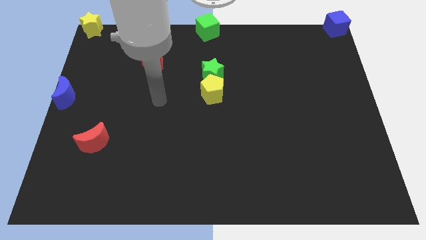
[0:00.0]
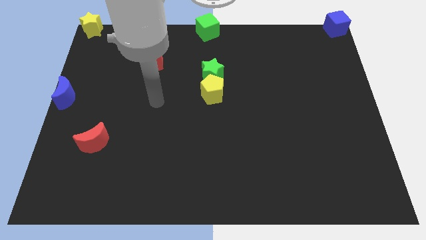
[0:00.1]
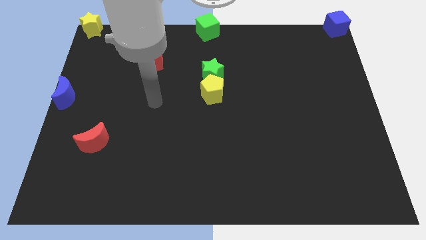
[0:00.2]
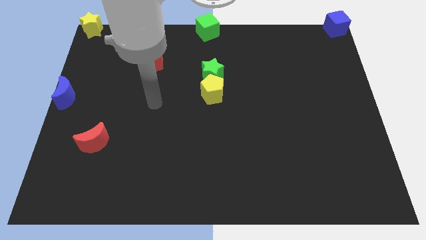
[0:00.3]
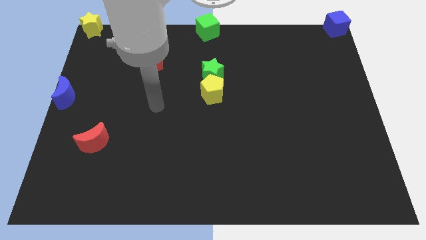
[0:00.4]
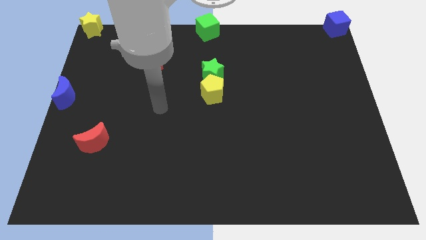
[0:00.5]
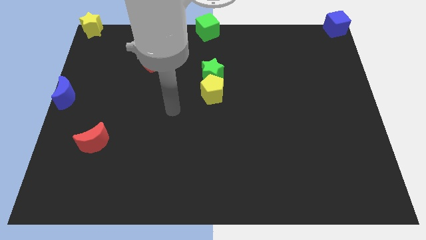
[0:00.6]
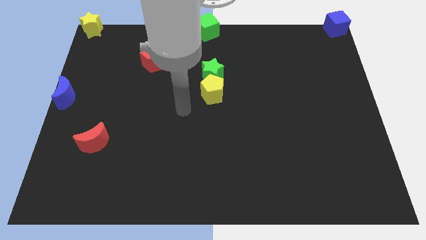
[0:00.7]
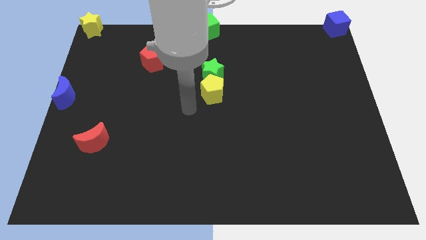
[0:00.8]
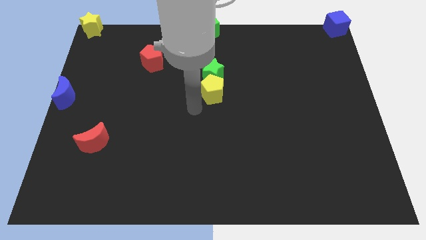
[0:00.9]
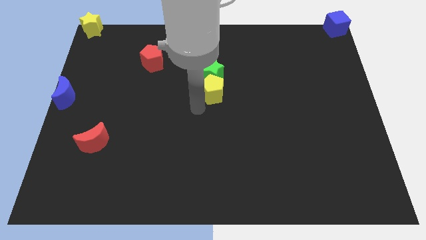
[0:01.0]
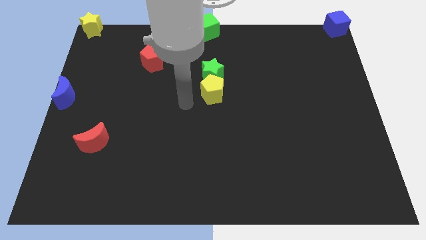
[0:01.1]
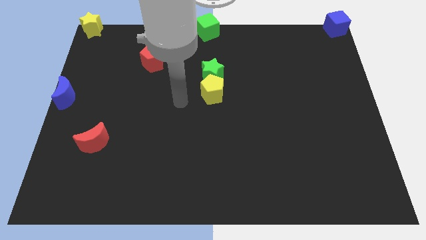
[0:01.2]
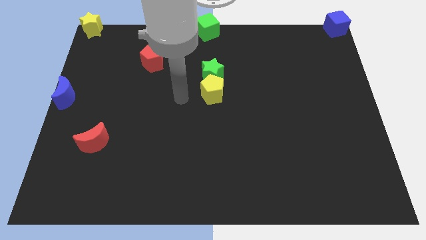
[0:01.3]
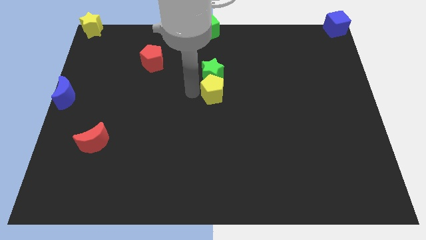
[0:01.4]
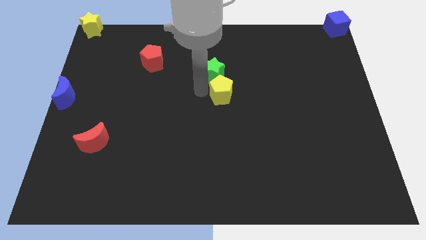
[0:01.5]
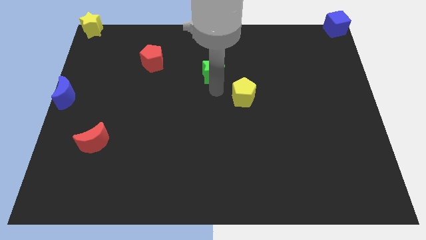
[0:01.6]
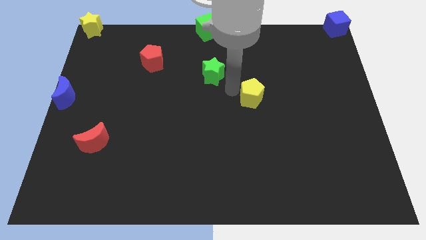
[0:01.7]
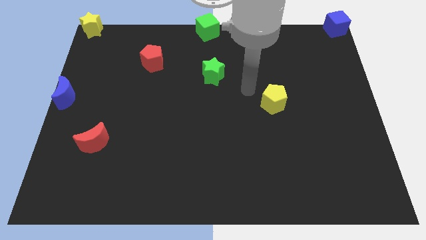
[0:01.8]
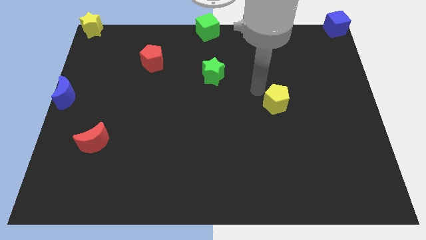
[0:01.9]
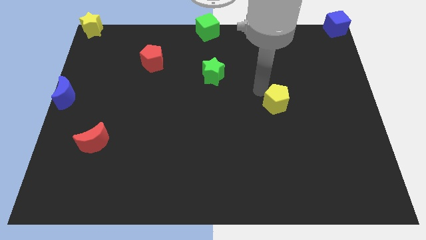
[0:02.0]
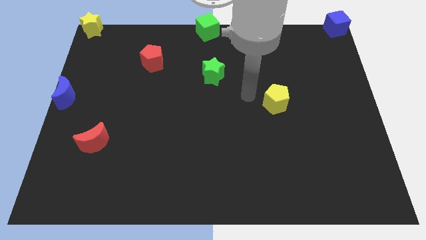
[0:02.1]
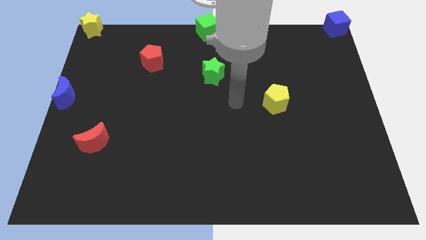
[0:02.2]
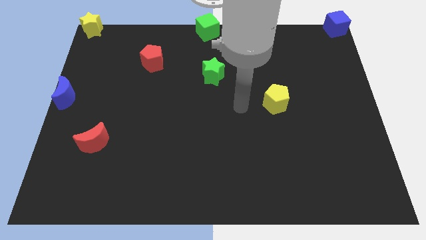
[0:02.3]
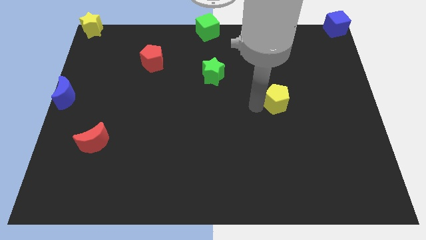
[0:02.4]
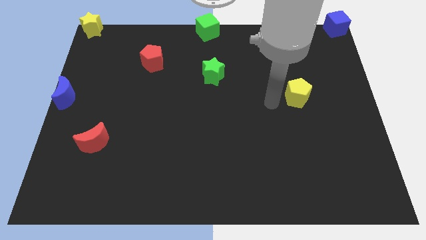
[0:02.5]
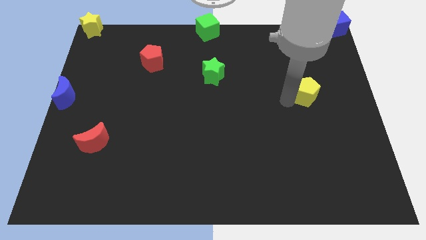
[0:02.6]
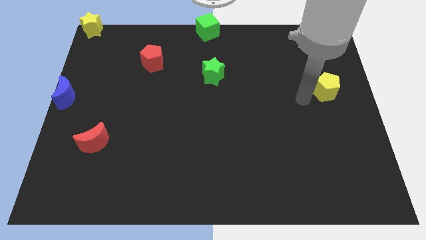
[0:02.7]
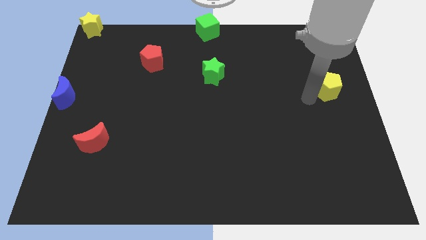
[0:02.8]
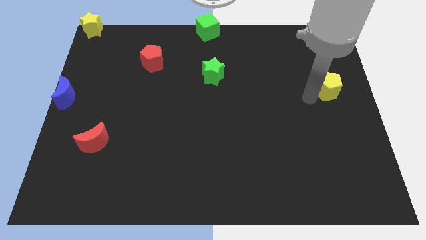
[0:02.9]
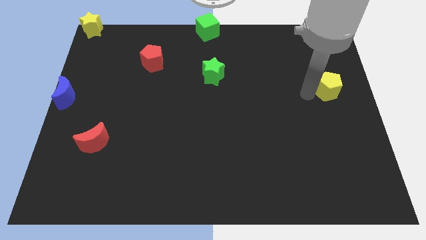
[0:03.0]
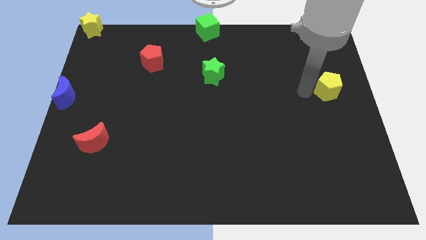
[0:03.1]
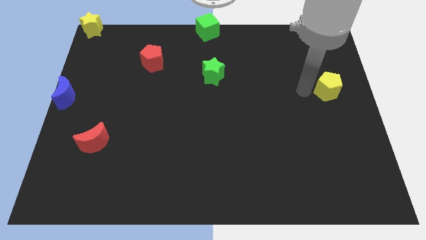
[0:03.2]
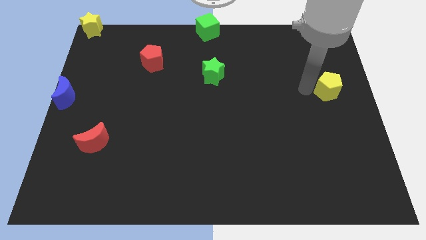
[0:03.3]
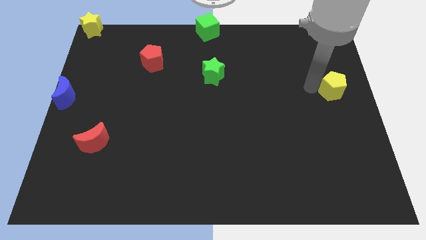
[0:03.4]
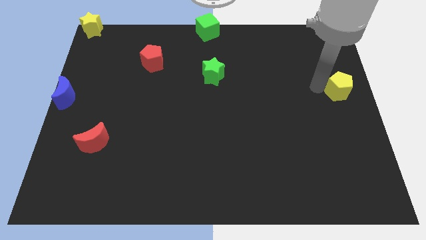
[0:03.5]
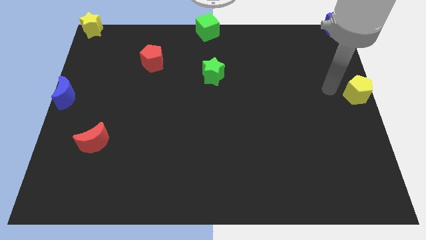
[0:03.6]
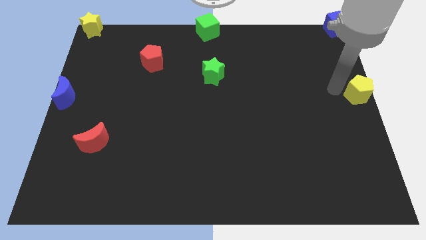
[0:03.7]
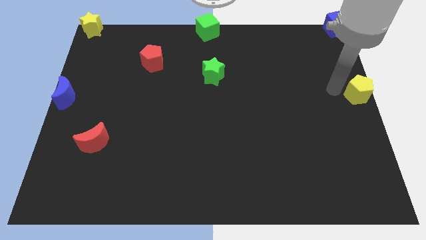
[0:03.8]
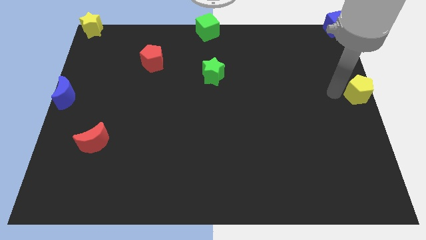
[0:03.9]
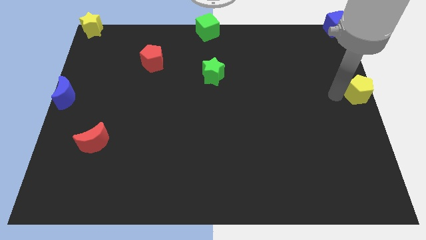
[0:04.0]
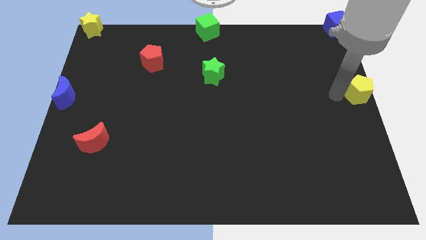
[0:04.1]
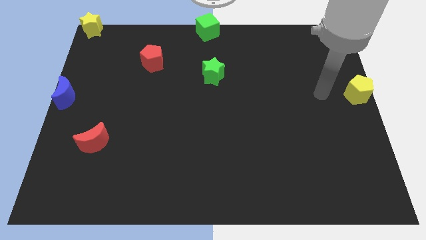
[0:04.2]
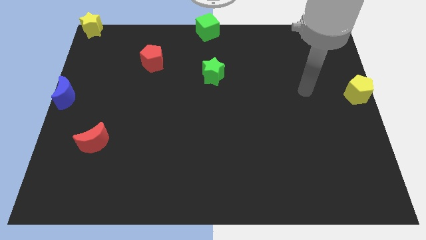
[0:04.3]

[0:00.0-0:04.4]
push the yellow pentagon to the center right

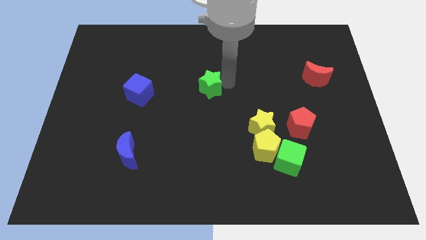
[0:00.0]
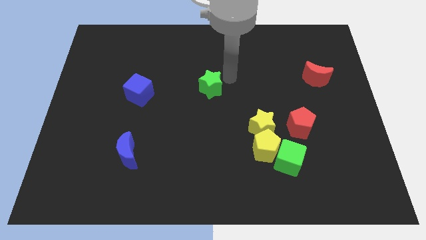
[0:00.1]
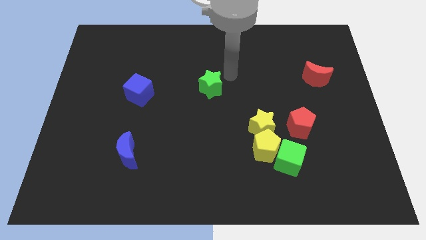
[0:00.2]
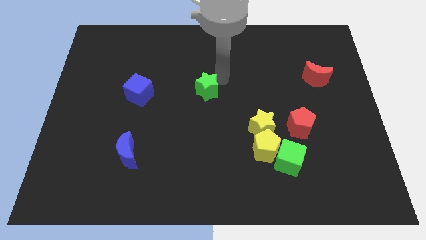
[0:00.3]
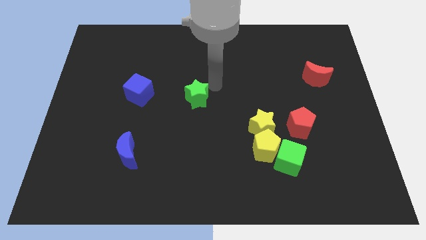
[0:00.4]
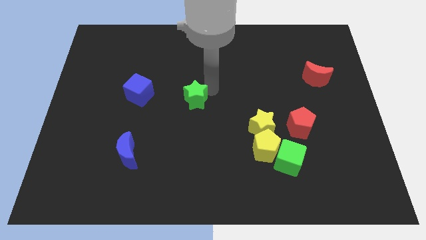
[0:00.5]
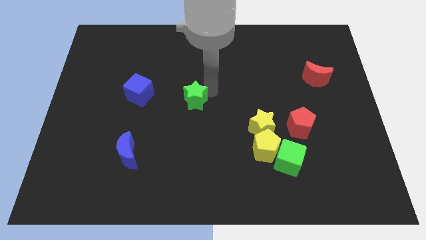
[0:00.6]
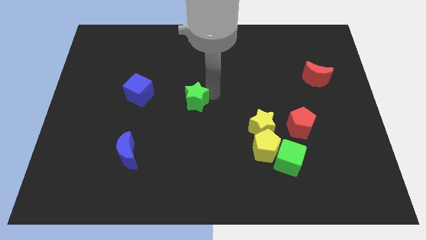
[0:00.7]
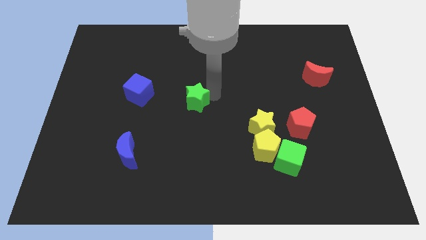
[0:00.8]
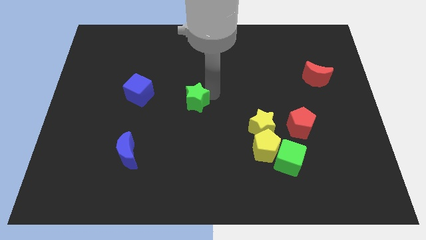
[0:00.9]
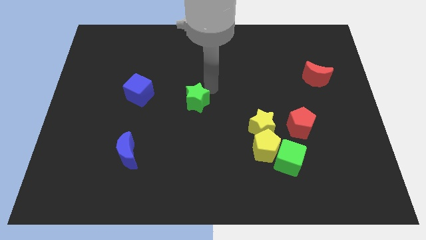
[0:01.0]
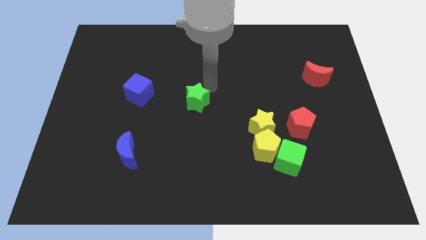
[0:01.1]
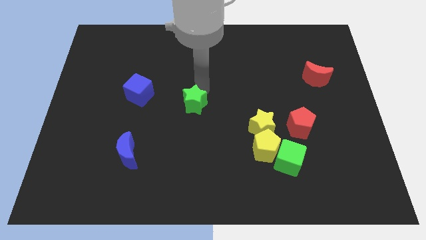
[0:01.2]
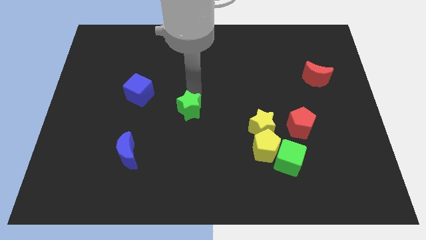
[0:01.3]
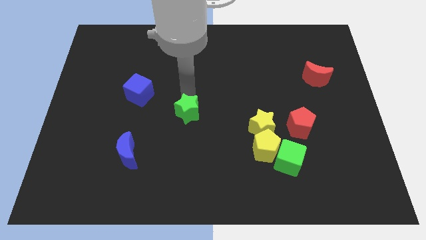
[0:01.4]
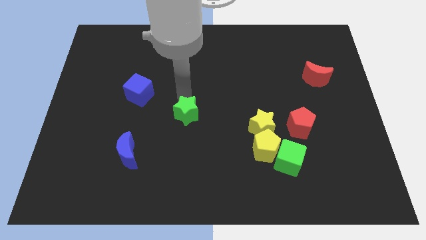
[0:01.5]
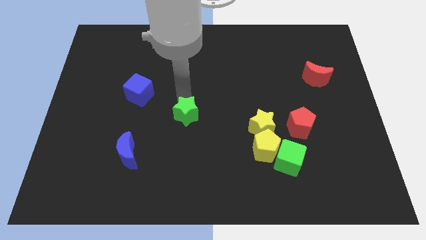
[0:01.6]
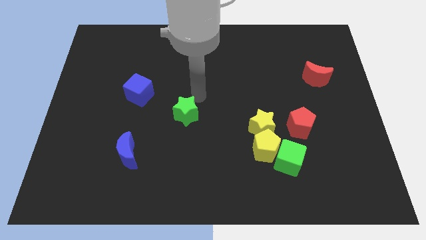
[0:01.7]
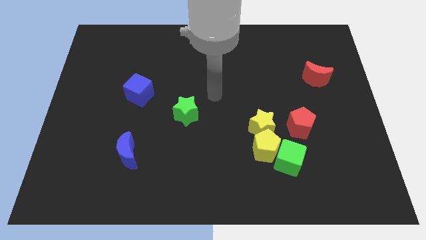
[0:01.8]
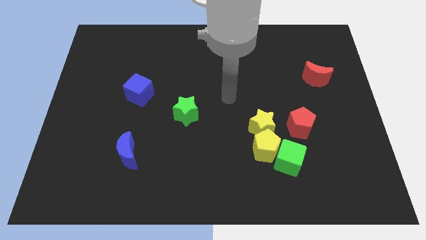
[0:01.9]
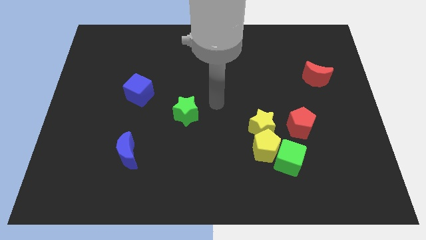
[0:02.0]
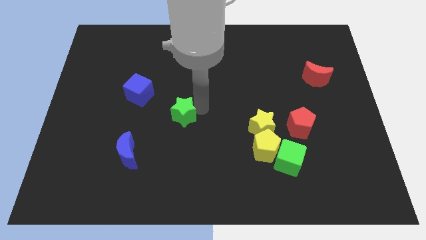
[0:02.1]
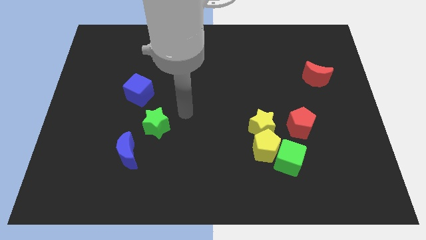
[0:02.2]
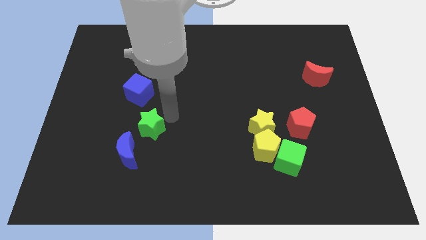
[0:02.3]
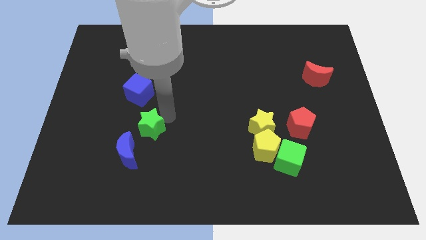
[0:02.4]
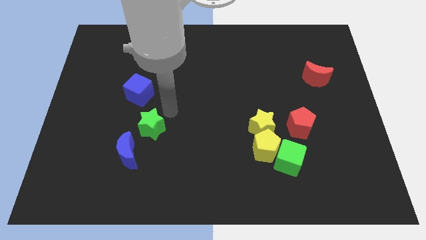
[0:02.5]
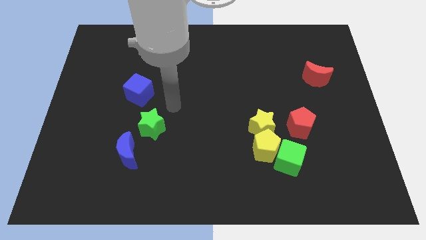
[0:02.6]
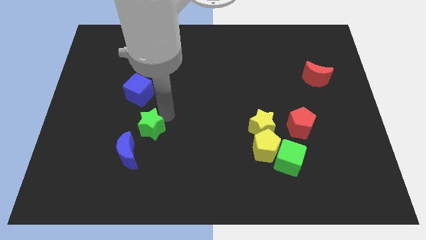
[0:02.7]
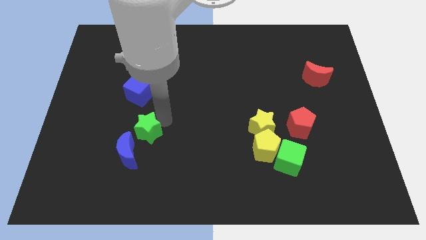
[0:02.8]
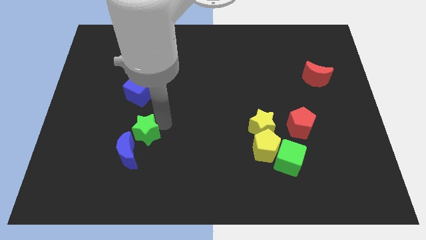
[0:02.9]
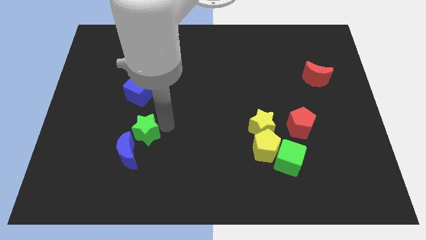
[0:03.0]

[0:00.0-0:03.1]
push the green star close to the blue moon

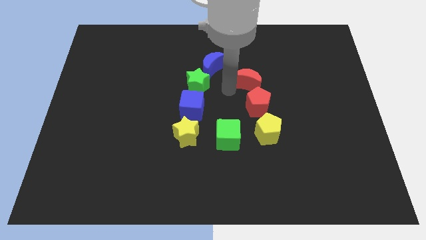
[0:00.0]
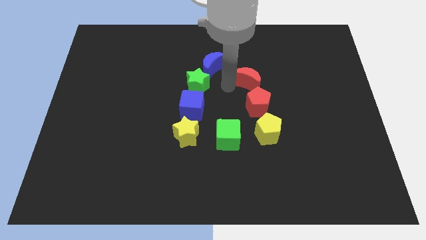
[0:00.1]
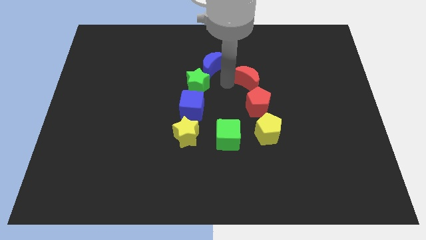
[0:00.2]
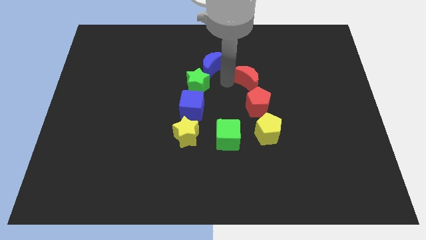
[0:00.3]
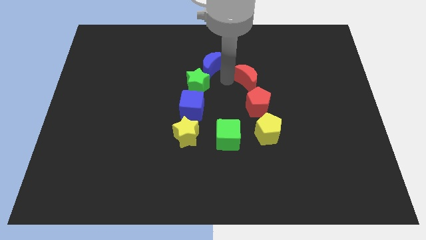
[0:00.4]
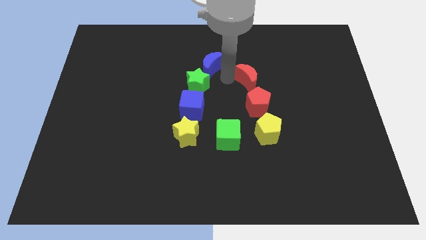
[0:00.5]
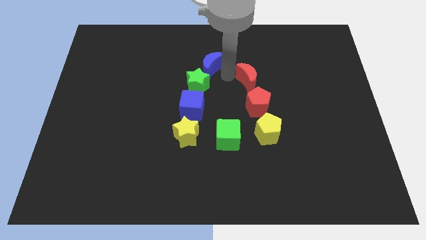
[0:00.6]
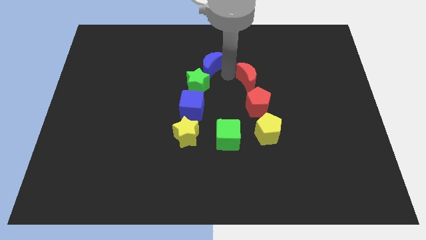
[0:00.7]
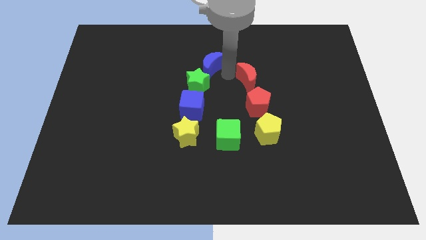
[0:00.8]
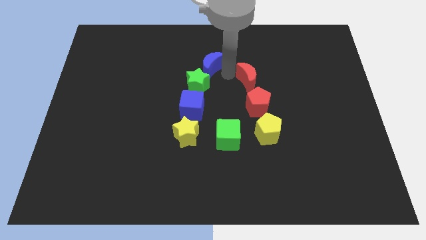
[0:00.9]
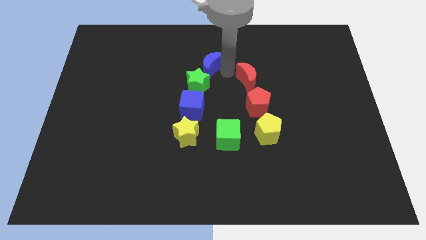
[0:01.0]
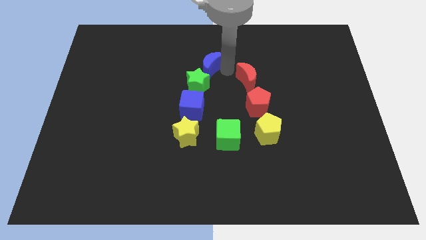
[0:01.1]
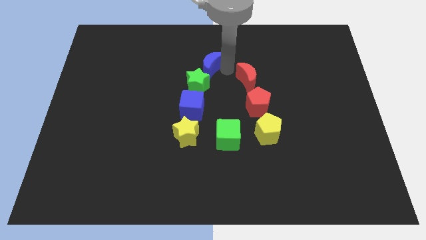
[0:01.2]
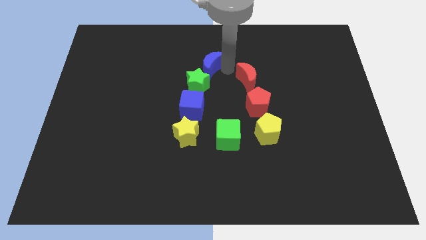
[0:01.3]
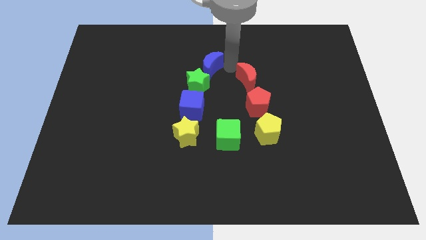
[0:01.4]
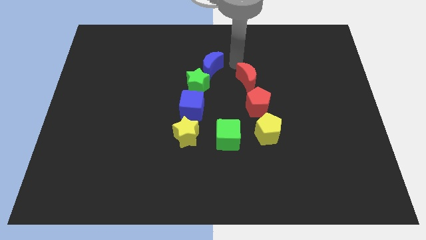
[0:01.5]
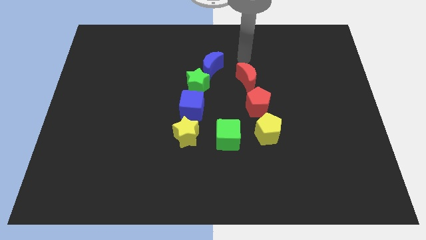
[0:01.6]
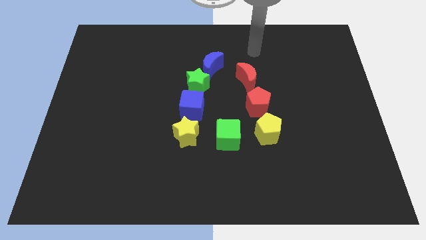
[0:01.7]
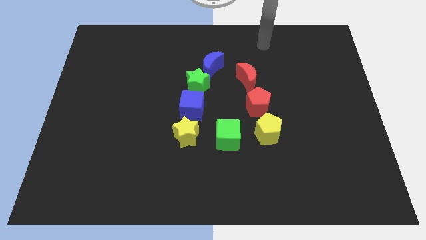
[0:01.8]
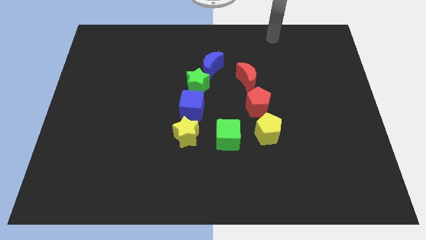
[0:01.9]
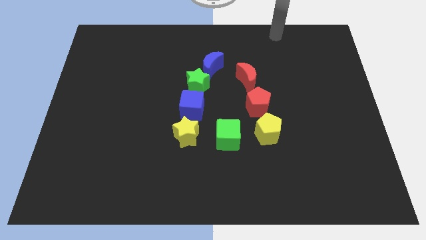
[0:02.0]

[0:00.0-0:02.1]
move your arm to the top side of the board
